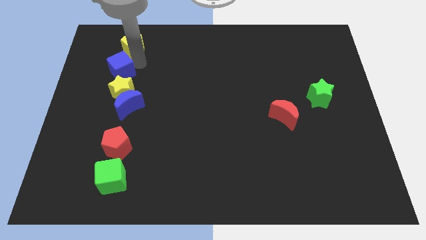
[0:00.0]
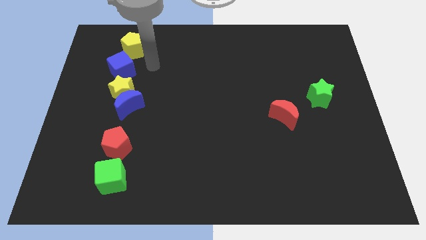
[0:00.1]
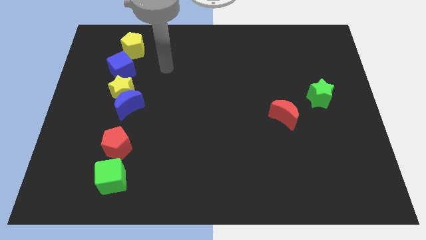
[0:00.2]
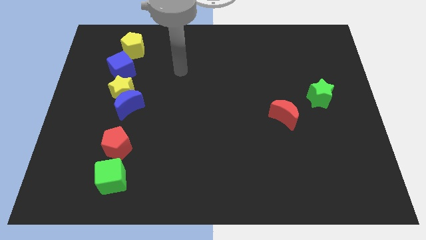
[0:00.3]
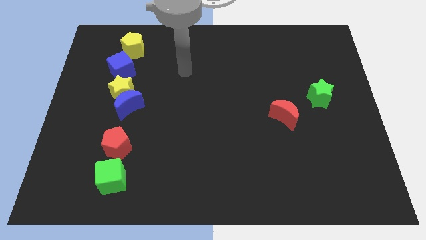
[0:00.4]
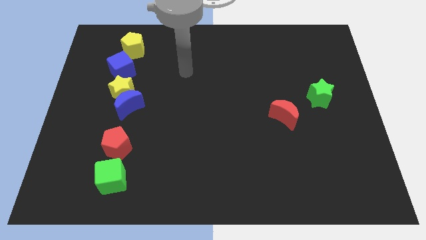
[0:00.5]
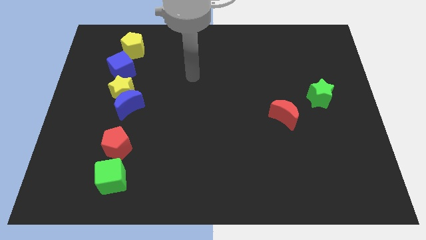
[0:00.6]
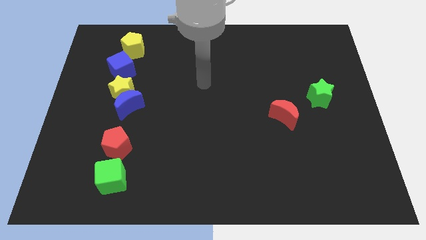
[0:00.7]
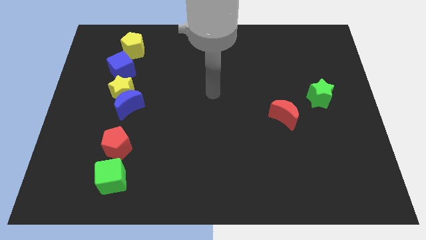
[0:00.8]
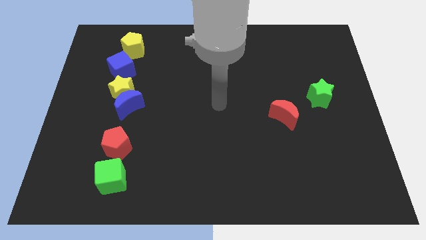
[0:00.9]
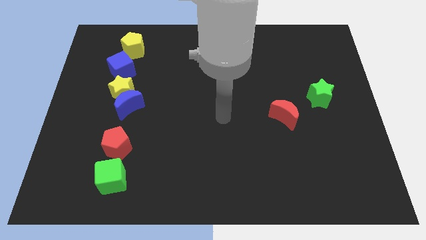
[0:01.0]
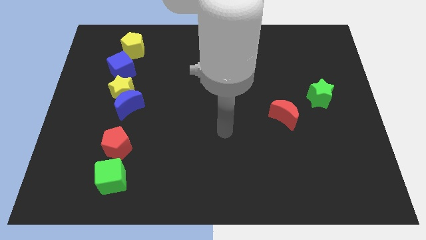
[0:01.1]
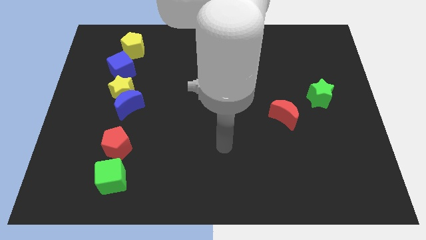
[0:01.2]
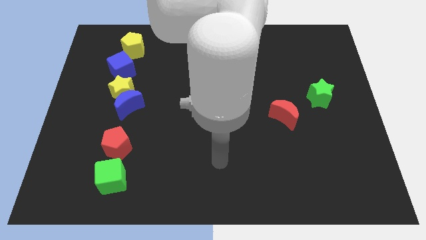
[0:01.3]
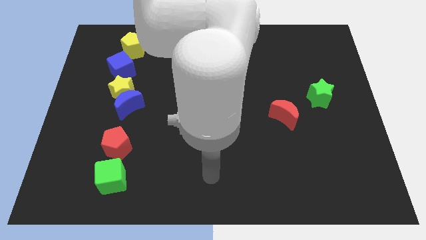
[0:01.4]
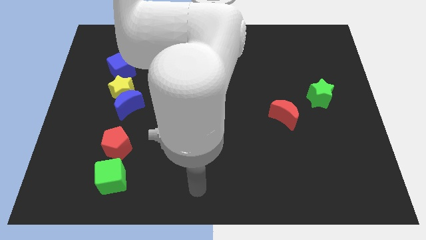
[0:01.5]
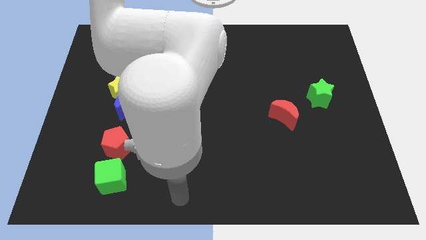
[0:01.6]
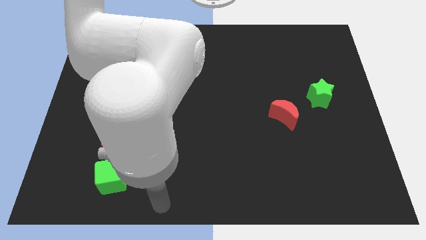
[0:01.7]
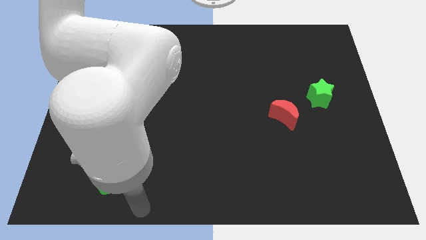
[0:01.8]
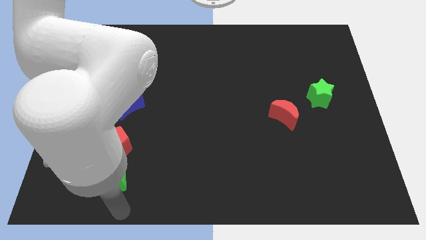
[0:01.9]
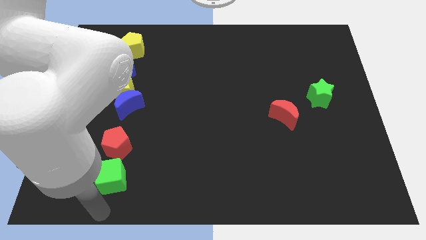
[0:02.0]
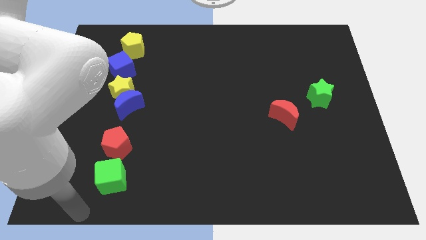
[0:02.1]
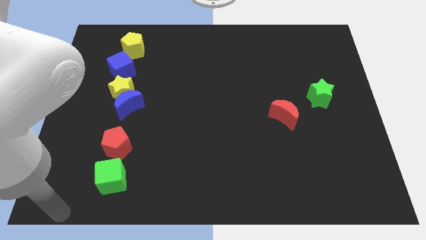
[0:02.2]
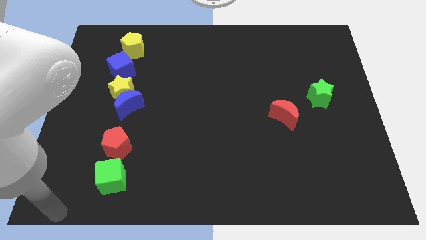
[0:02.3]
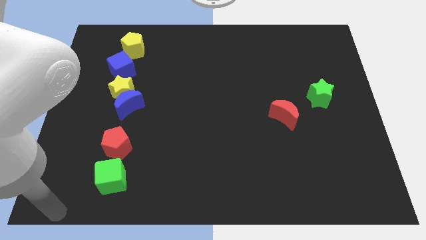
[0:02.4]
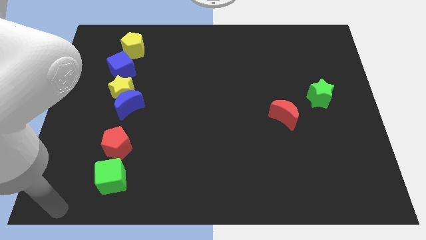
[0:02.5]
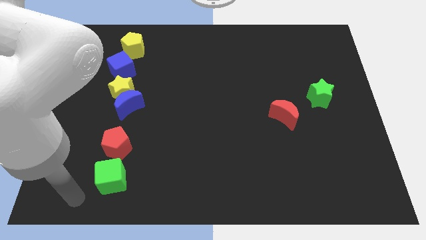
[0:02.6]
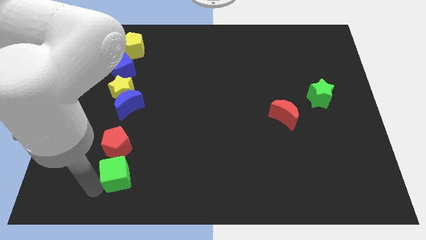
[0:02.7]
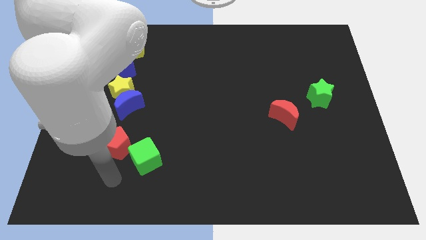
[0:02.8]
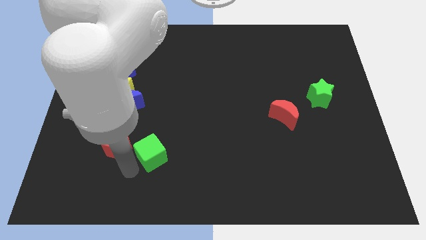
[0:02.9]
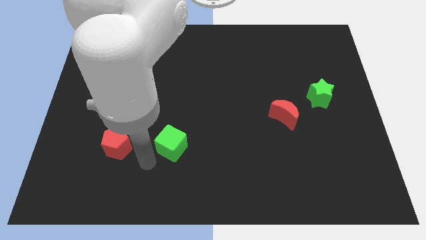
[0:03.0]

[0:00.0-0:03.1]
move the green cube to the right of the red pentagon

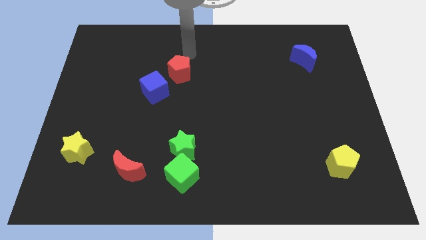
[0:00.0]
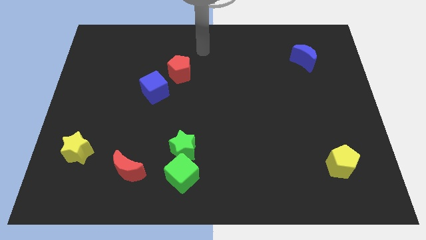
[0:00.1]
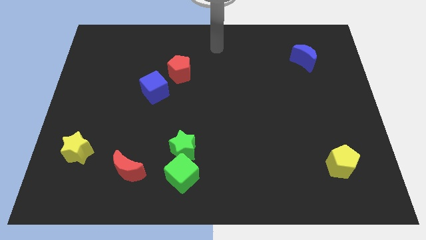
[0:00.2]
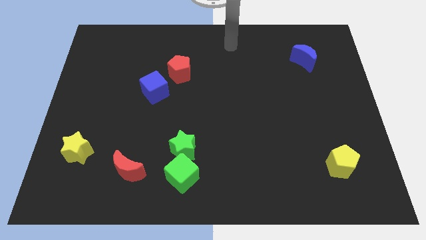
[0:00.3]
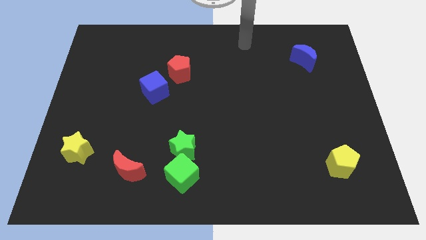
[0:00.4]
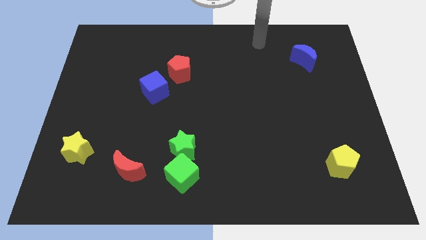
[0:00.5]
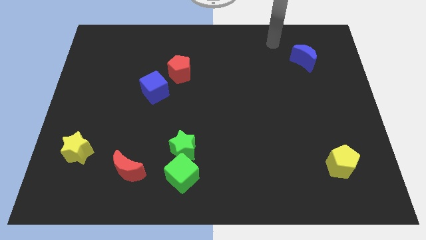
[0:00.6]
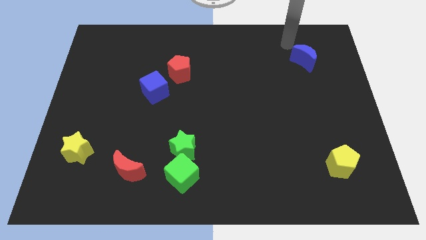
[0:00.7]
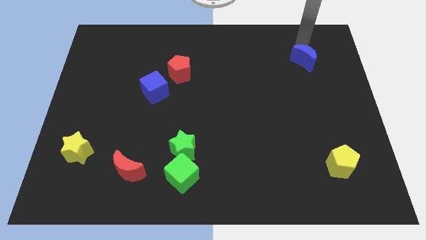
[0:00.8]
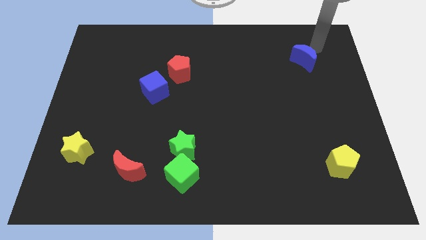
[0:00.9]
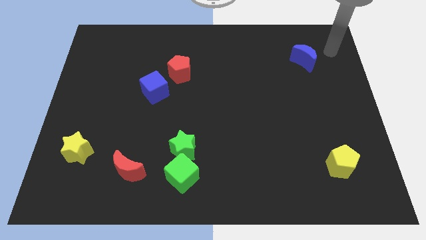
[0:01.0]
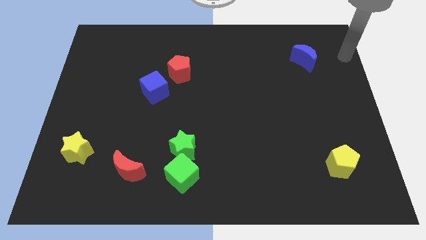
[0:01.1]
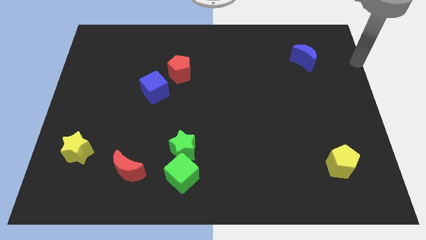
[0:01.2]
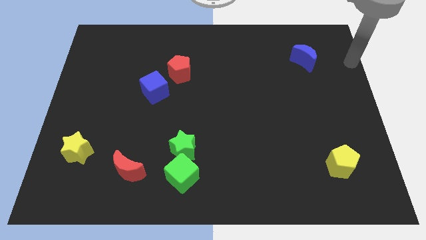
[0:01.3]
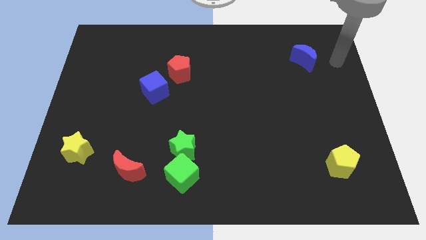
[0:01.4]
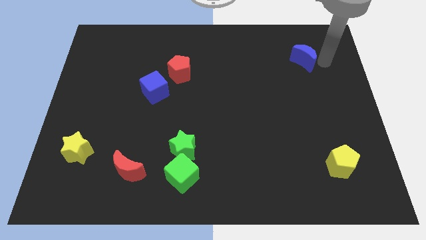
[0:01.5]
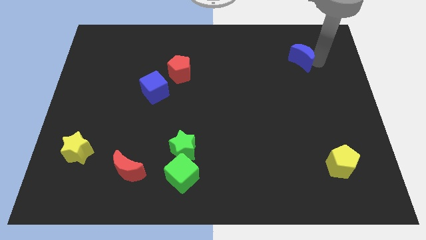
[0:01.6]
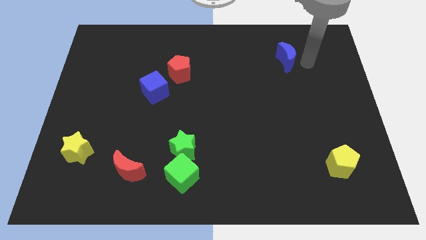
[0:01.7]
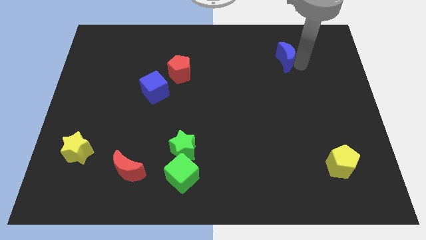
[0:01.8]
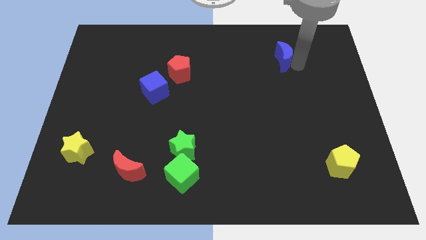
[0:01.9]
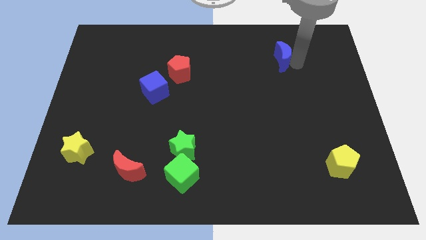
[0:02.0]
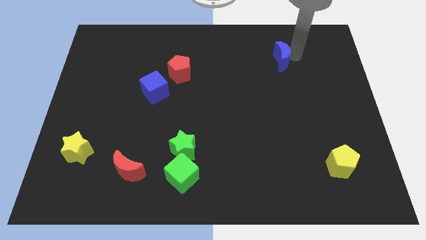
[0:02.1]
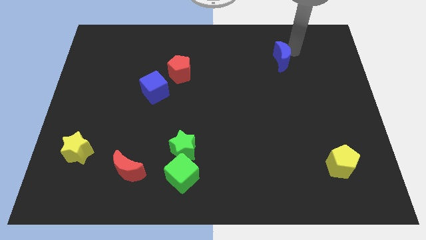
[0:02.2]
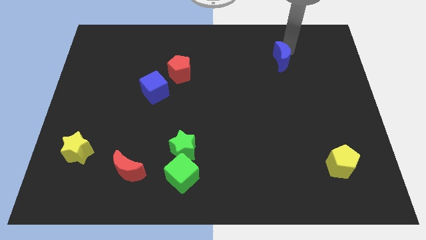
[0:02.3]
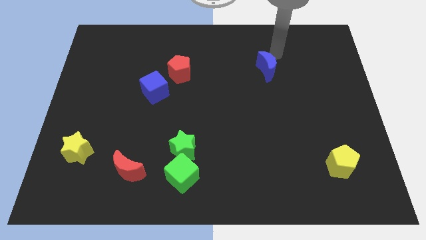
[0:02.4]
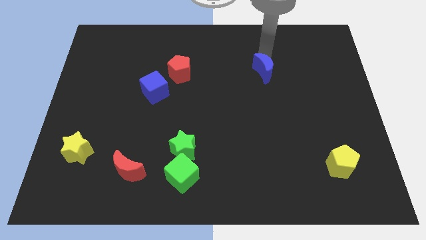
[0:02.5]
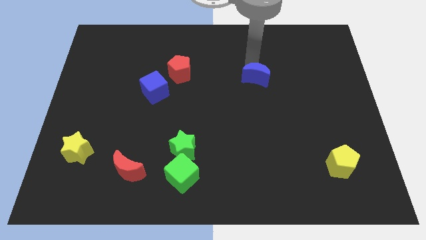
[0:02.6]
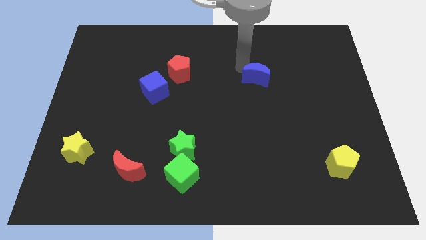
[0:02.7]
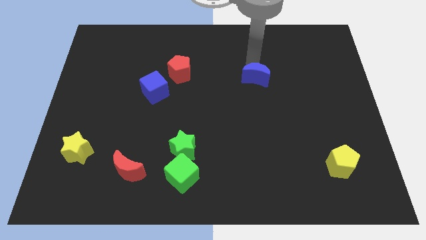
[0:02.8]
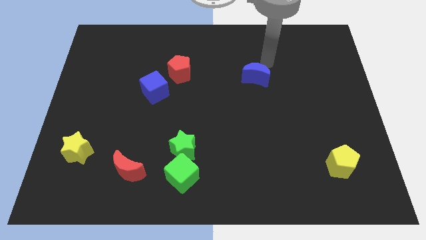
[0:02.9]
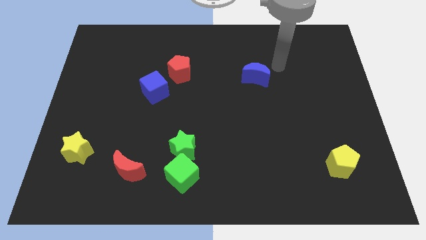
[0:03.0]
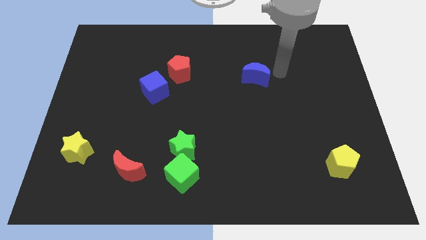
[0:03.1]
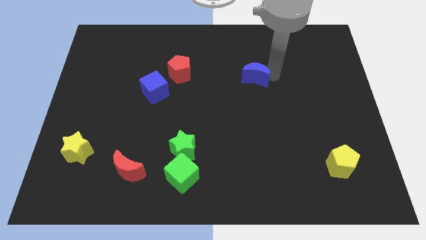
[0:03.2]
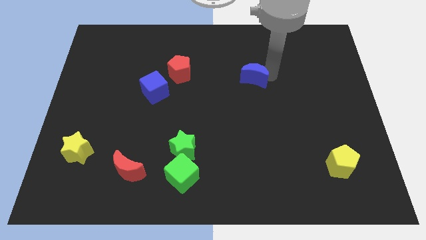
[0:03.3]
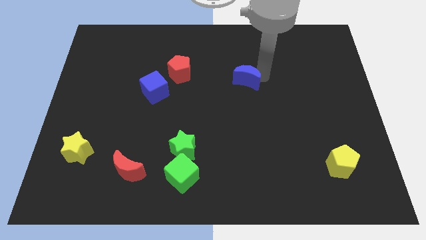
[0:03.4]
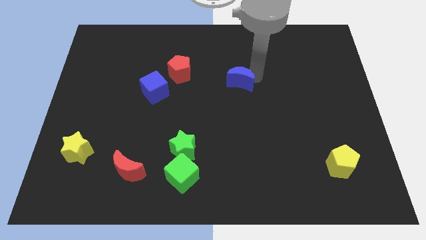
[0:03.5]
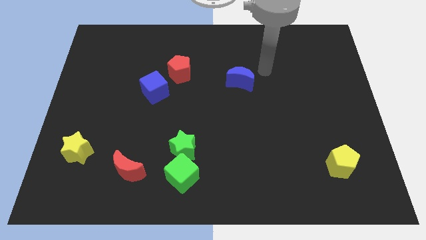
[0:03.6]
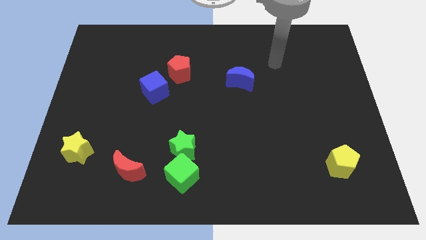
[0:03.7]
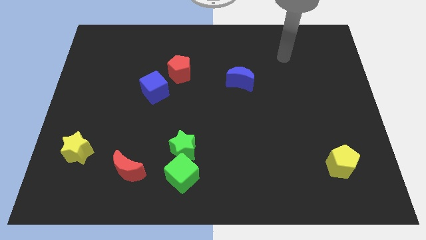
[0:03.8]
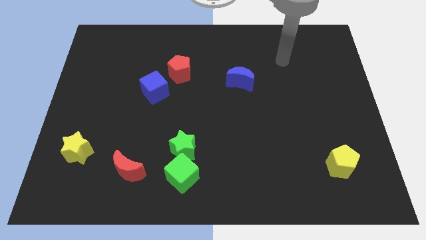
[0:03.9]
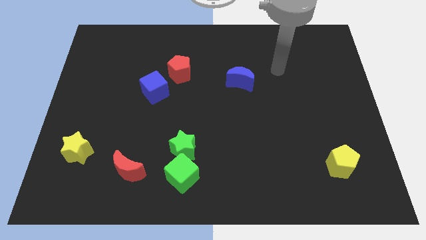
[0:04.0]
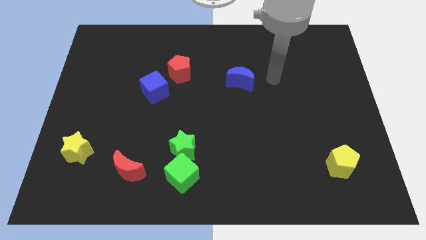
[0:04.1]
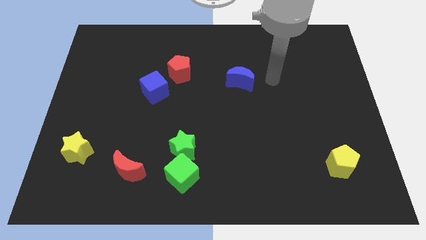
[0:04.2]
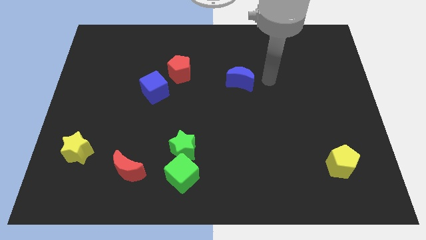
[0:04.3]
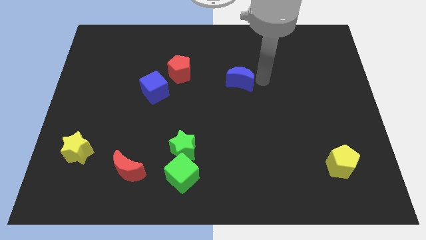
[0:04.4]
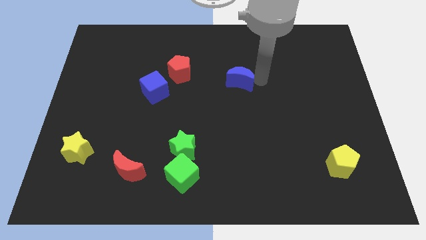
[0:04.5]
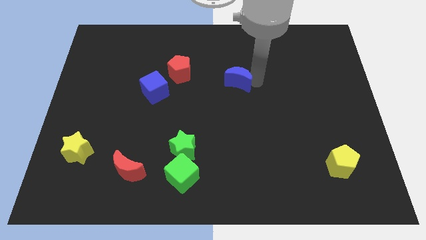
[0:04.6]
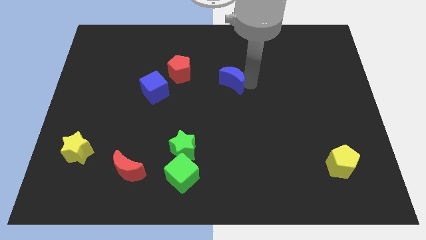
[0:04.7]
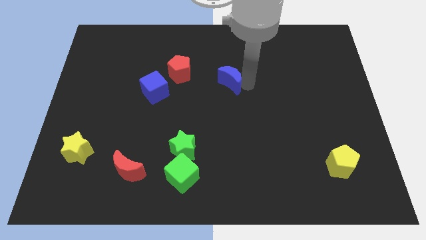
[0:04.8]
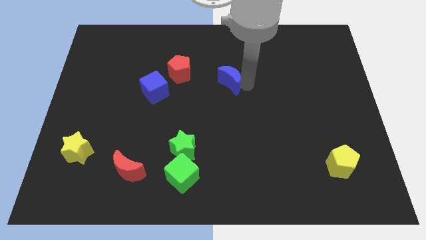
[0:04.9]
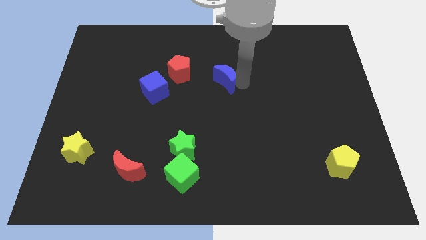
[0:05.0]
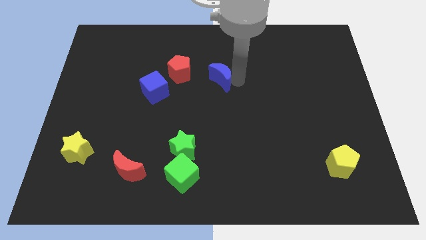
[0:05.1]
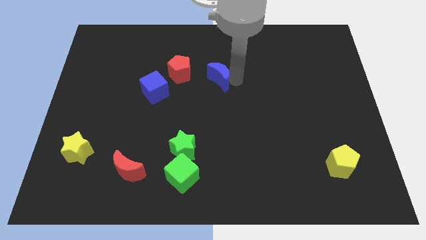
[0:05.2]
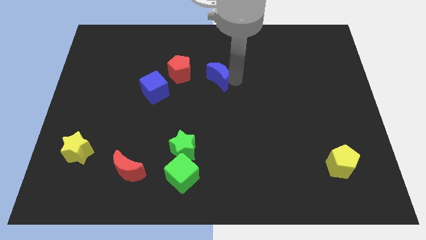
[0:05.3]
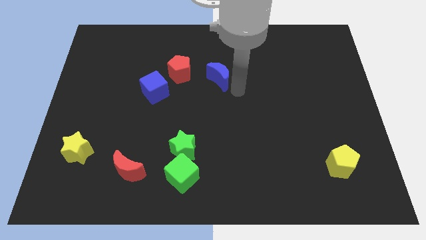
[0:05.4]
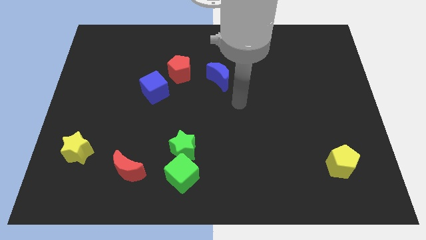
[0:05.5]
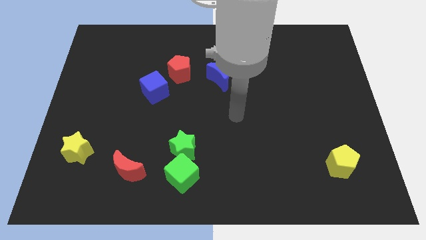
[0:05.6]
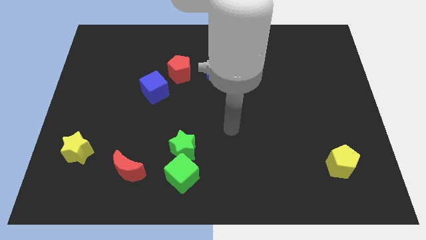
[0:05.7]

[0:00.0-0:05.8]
push the blue moon towards the red pentagon

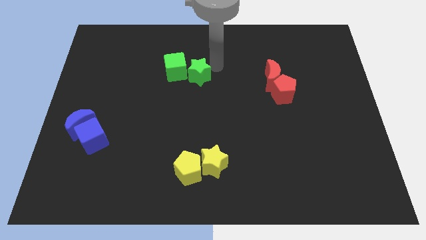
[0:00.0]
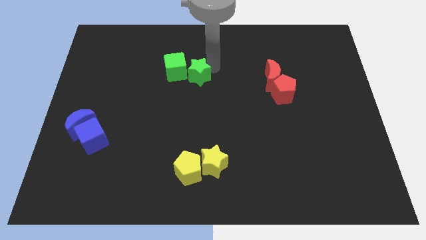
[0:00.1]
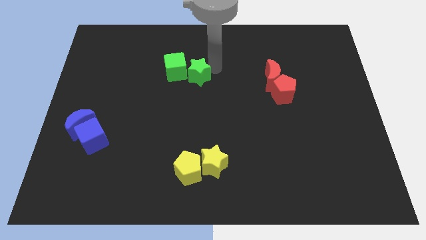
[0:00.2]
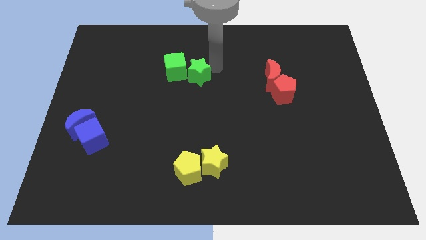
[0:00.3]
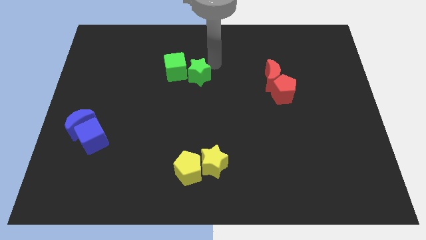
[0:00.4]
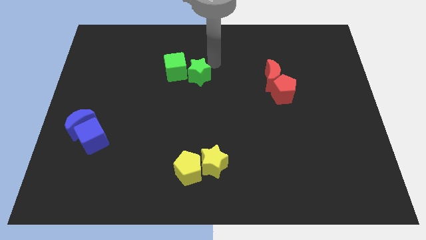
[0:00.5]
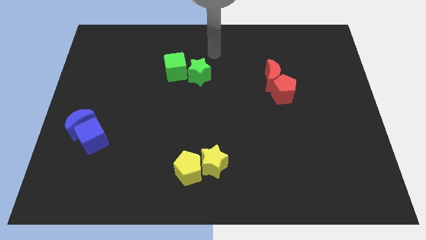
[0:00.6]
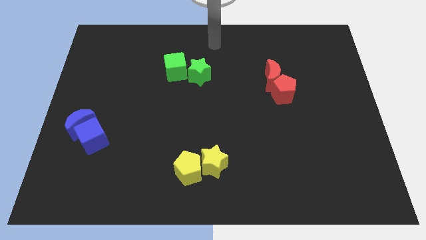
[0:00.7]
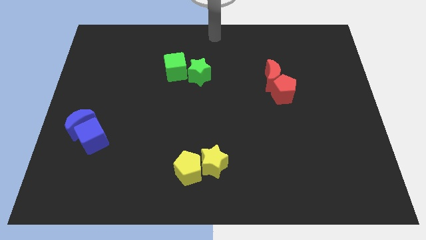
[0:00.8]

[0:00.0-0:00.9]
point your arm at the top center of the board
